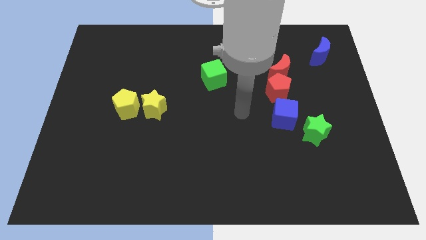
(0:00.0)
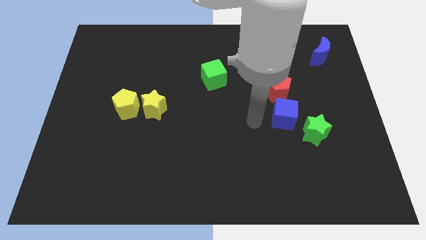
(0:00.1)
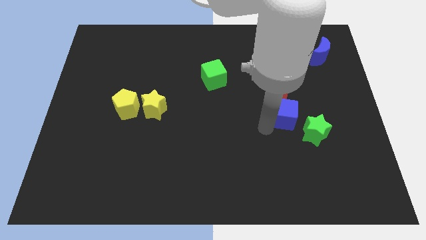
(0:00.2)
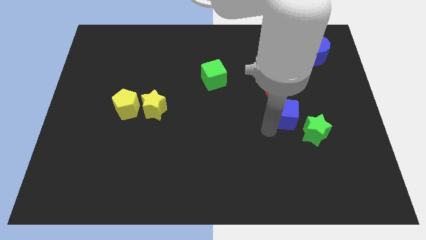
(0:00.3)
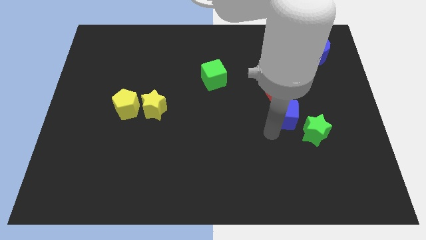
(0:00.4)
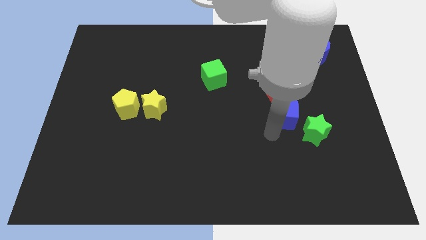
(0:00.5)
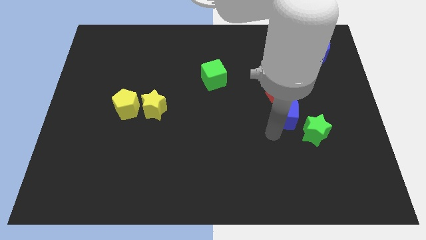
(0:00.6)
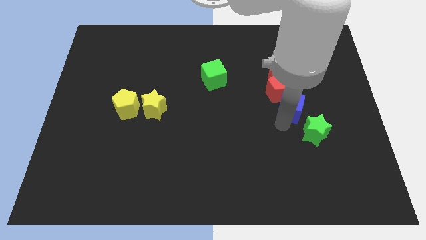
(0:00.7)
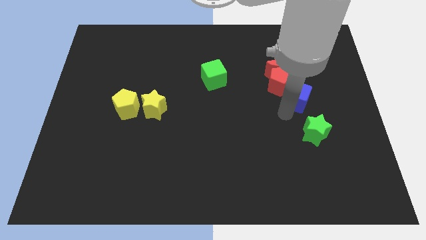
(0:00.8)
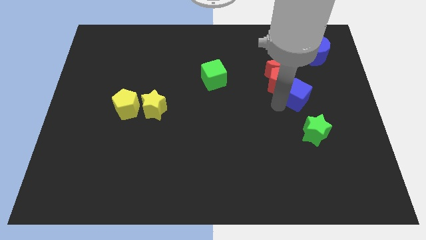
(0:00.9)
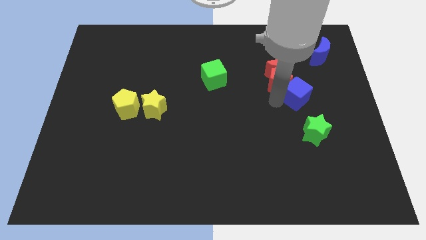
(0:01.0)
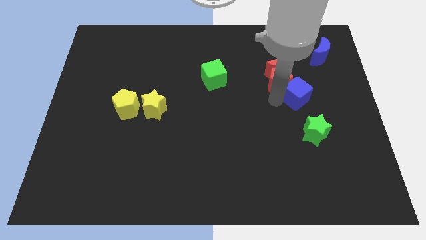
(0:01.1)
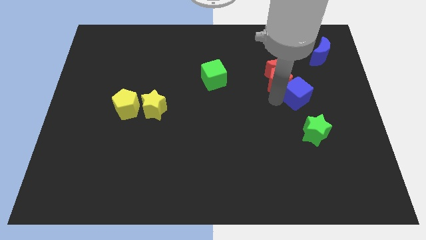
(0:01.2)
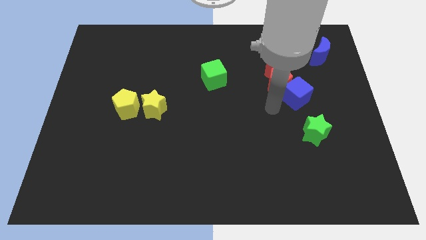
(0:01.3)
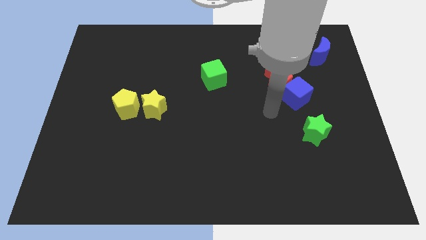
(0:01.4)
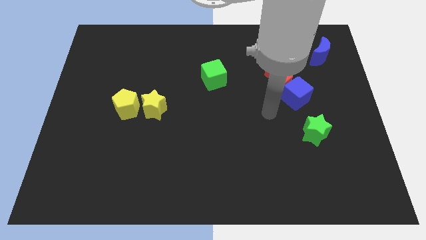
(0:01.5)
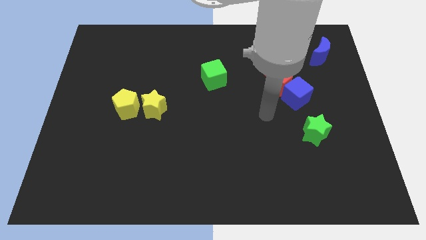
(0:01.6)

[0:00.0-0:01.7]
push the blue cube in to red pentagon

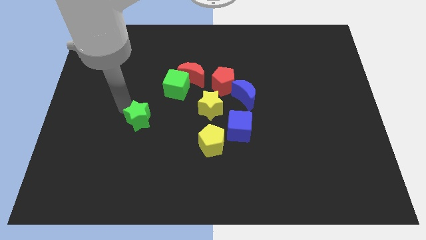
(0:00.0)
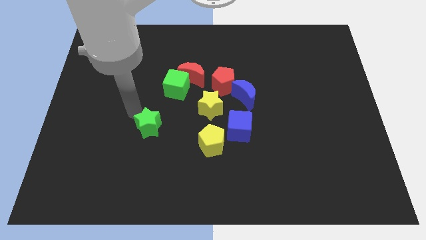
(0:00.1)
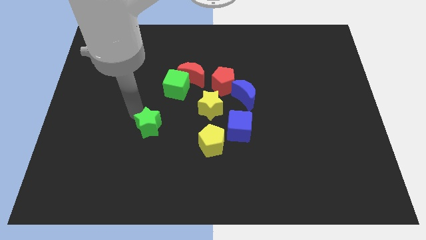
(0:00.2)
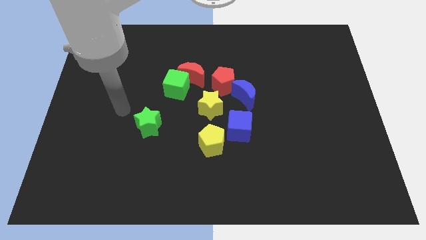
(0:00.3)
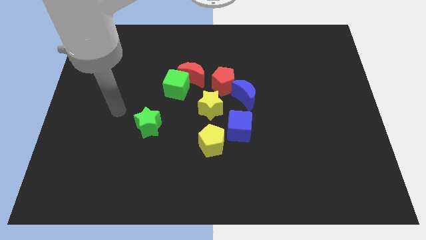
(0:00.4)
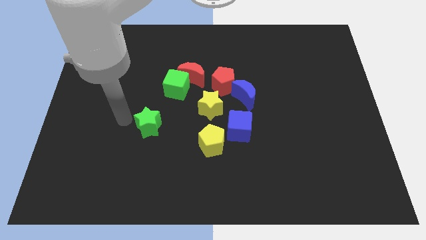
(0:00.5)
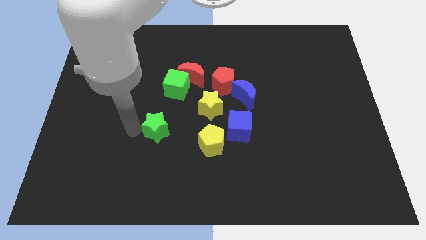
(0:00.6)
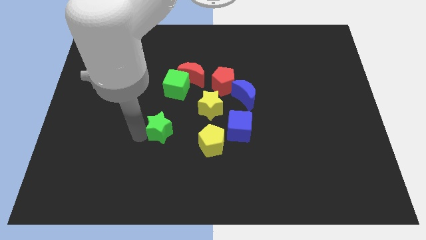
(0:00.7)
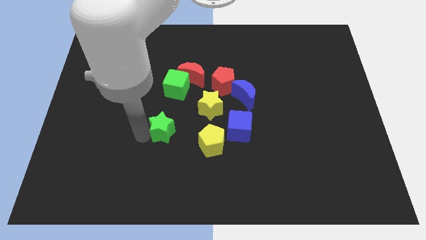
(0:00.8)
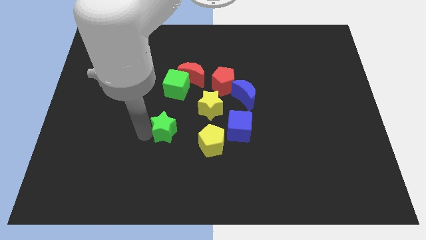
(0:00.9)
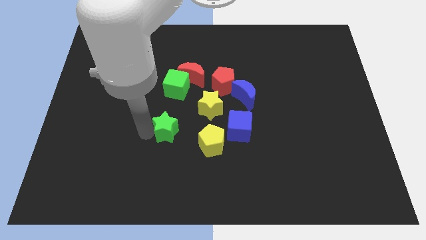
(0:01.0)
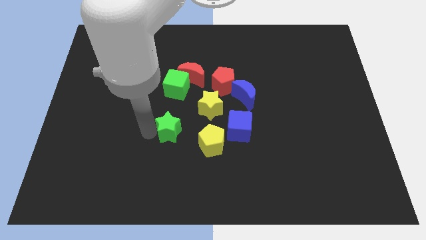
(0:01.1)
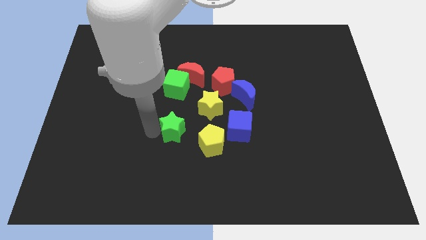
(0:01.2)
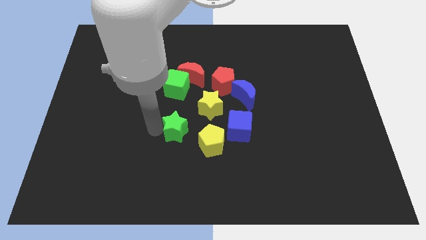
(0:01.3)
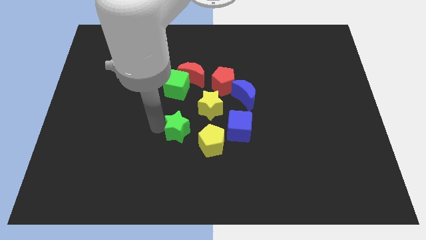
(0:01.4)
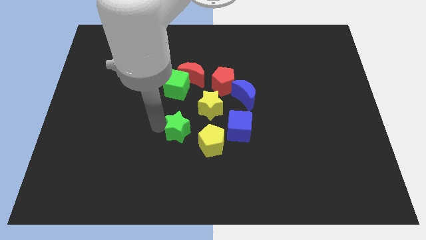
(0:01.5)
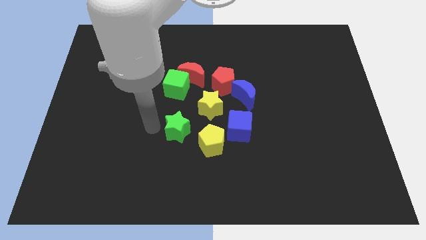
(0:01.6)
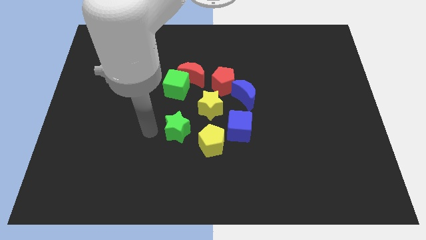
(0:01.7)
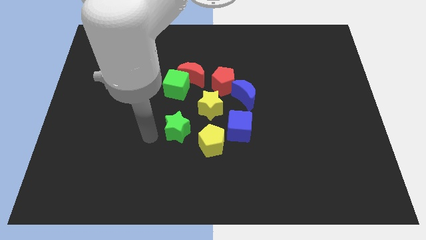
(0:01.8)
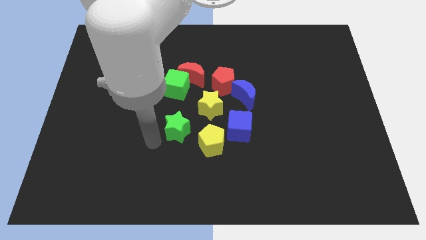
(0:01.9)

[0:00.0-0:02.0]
push the green star close to the yellow pentagon

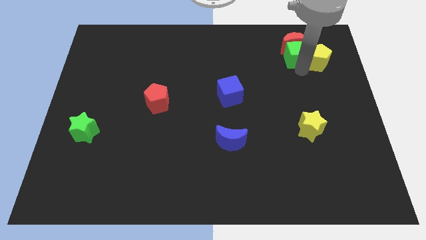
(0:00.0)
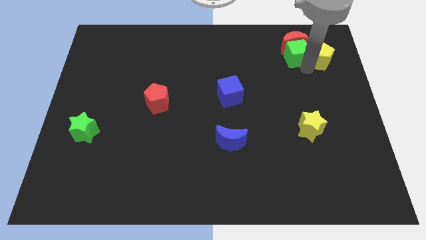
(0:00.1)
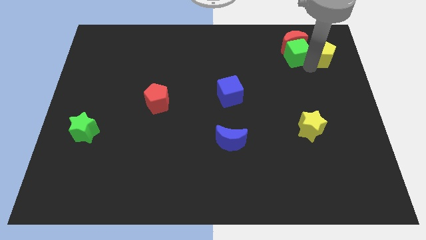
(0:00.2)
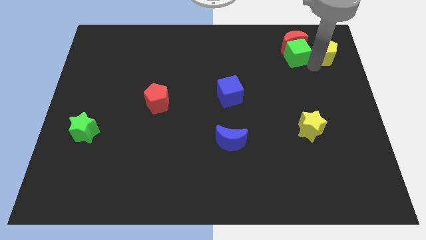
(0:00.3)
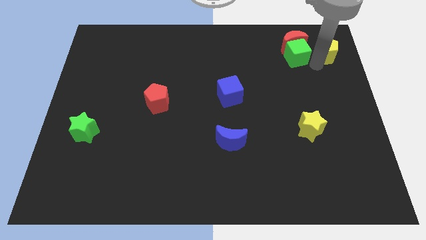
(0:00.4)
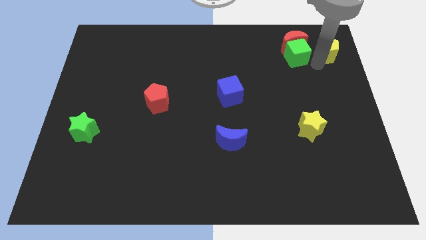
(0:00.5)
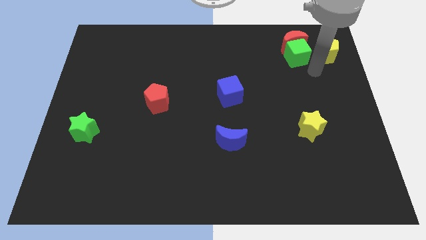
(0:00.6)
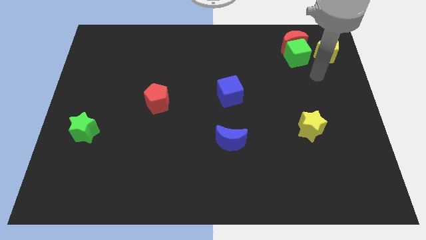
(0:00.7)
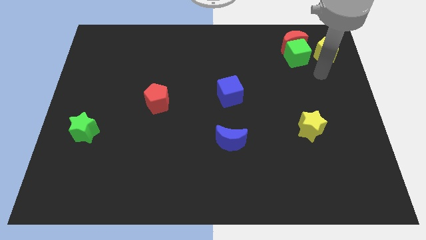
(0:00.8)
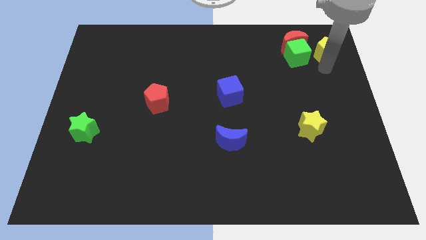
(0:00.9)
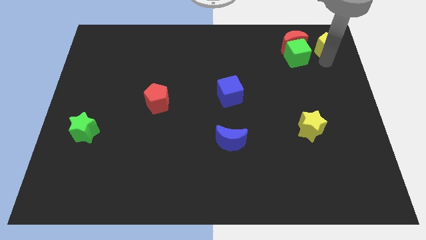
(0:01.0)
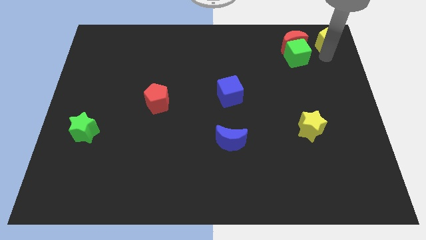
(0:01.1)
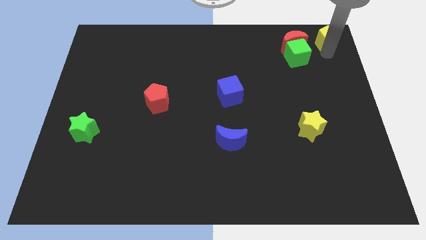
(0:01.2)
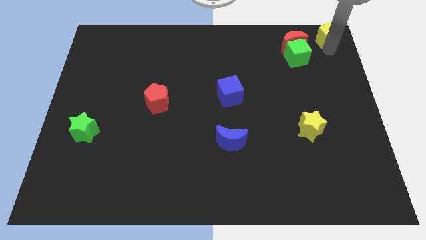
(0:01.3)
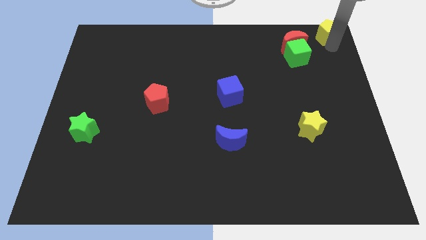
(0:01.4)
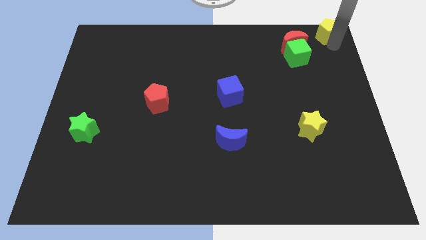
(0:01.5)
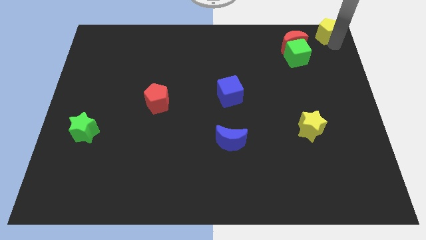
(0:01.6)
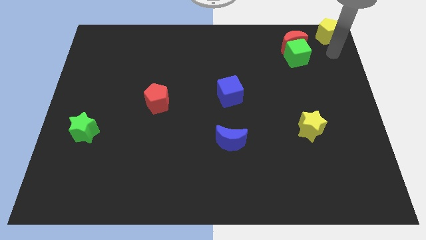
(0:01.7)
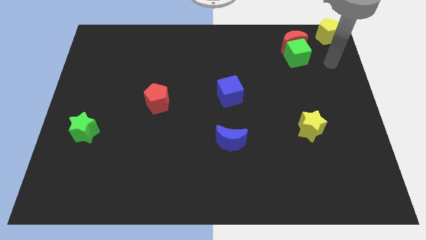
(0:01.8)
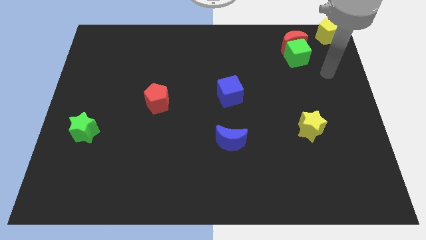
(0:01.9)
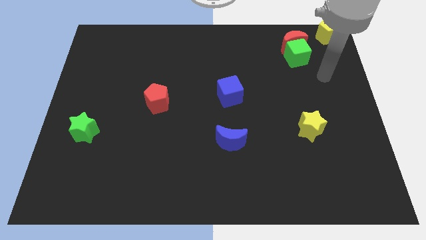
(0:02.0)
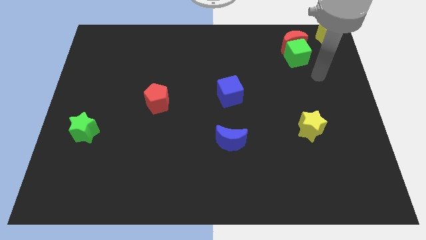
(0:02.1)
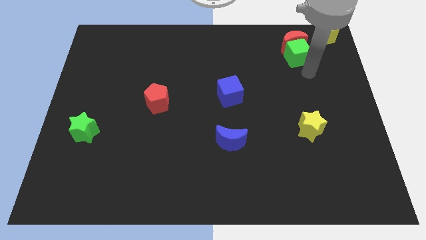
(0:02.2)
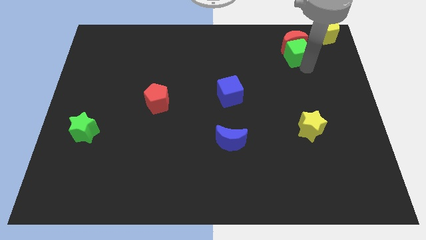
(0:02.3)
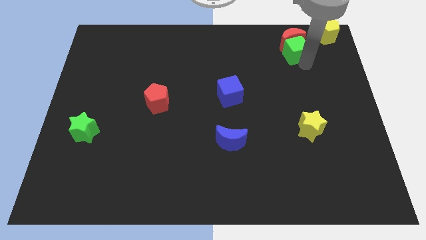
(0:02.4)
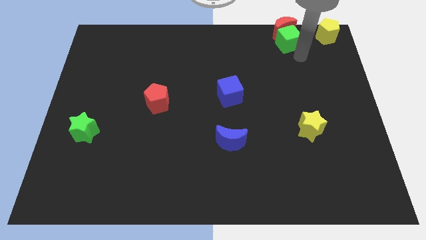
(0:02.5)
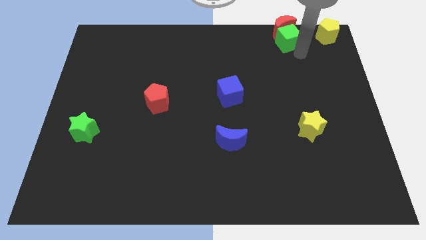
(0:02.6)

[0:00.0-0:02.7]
move the yellow pentagon to the top right corner

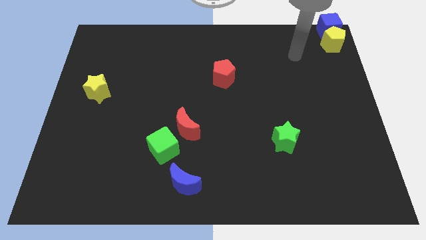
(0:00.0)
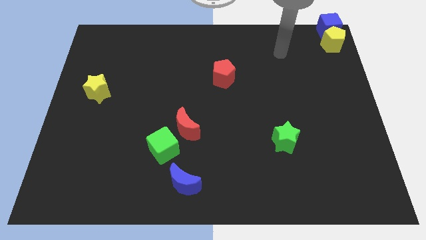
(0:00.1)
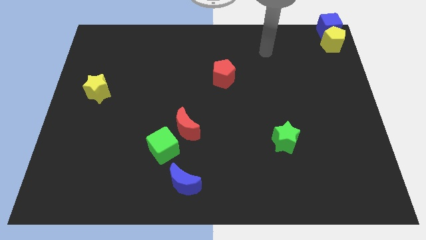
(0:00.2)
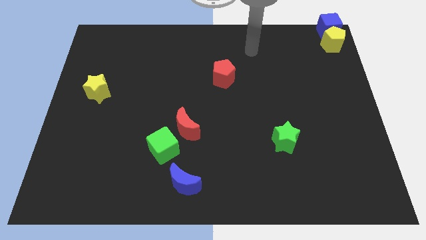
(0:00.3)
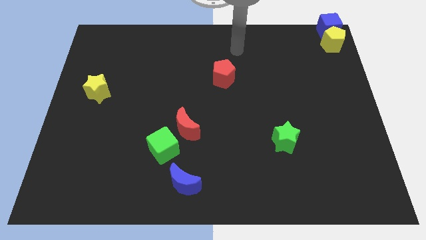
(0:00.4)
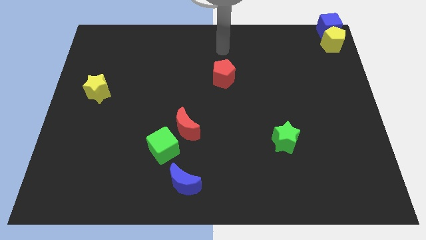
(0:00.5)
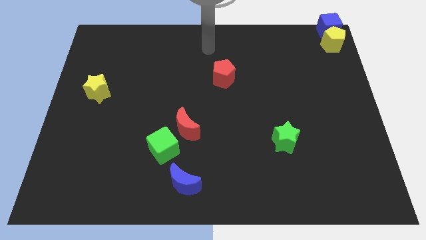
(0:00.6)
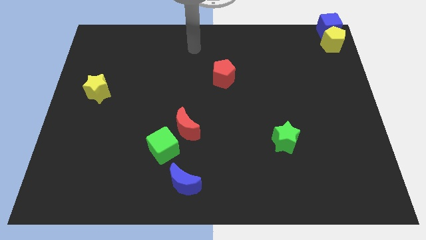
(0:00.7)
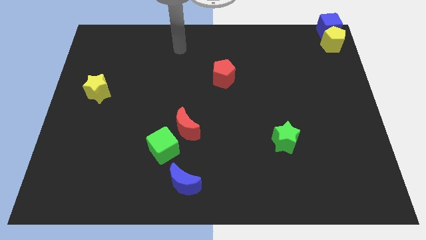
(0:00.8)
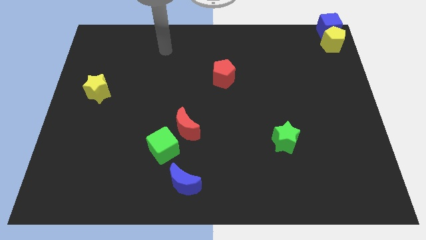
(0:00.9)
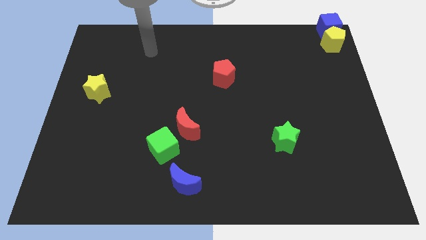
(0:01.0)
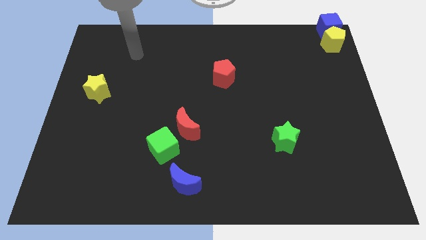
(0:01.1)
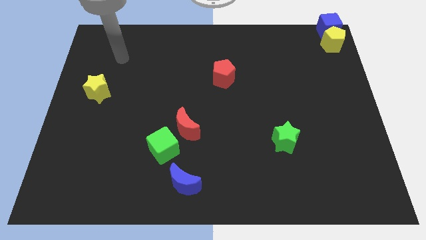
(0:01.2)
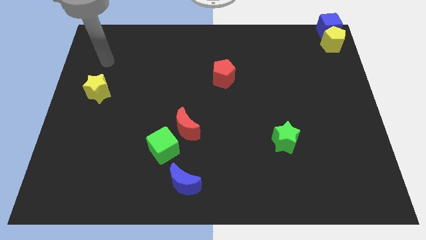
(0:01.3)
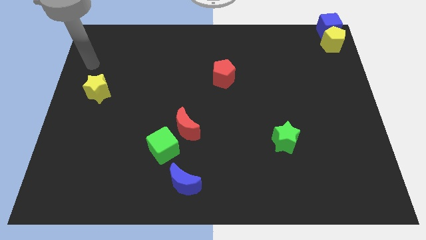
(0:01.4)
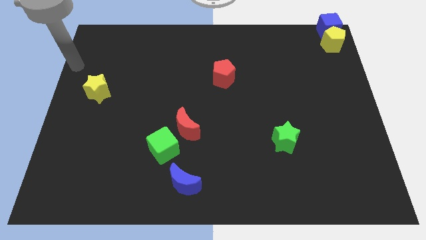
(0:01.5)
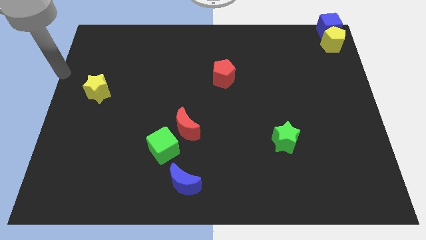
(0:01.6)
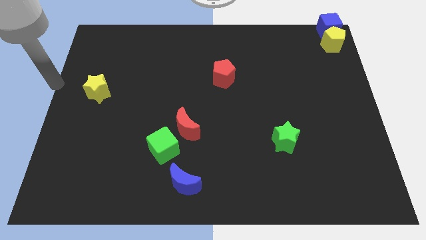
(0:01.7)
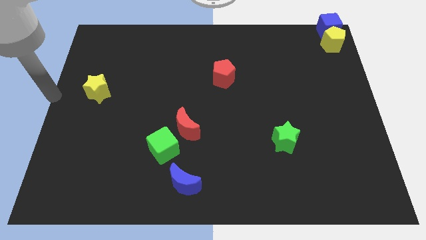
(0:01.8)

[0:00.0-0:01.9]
move arm to the left side of the yellow star

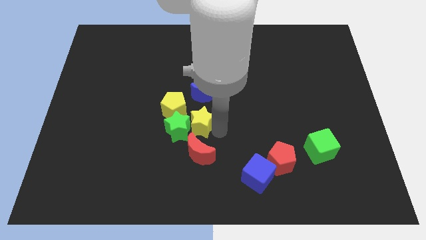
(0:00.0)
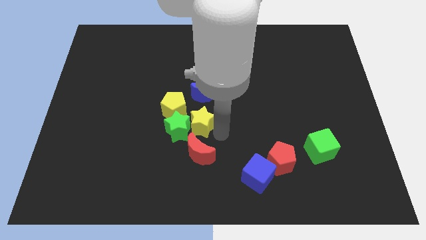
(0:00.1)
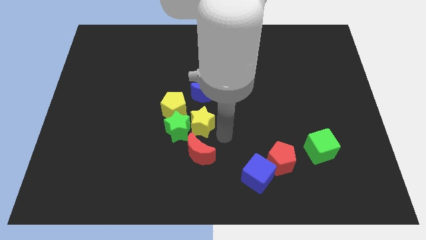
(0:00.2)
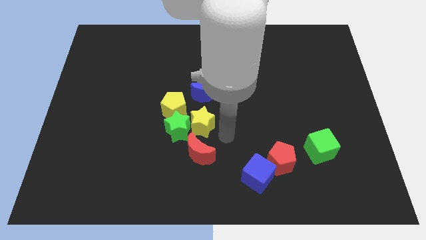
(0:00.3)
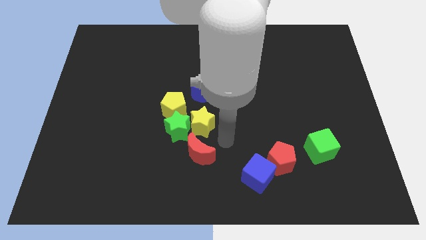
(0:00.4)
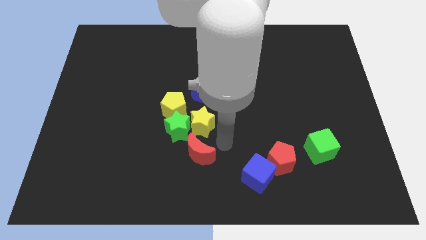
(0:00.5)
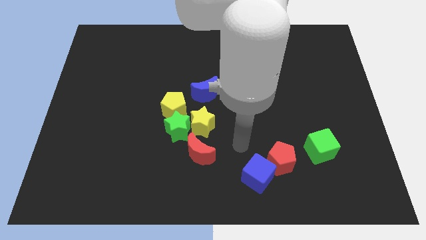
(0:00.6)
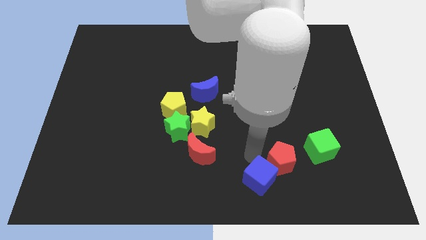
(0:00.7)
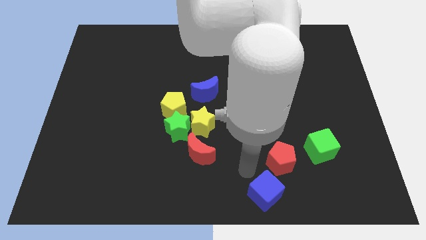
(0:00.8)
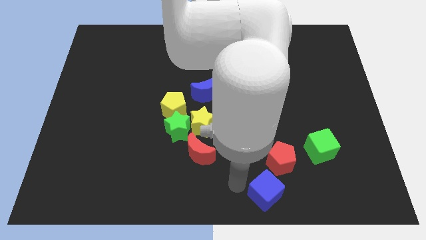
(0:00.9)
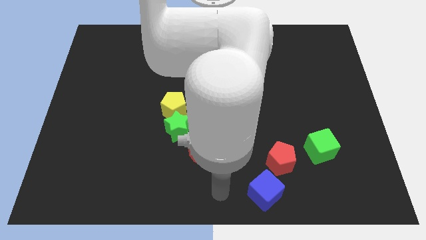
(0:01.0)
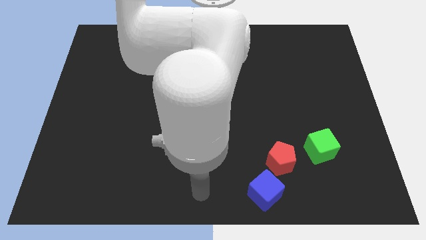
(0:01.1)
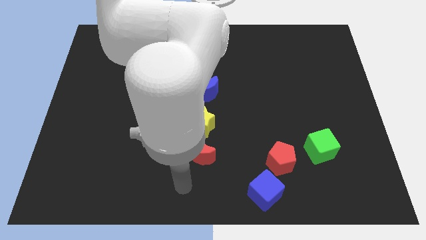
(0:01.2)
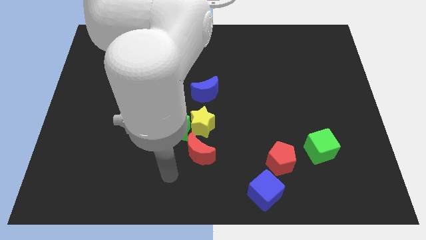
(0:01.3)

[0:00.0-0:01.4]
place blue cube to the bottom left of red pentagon
